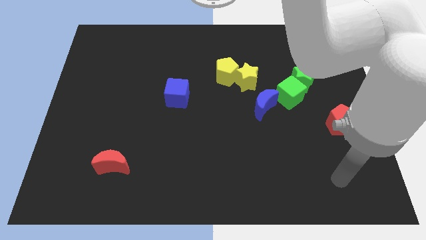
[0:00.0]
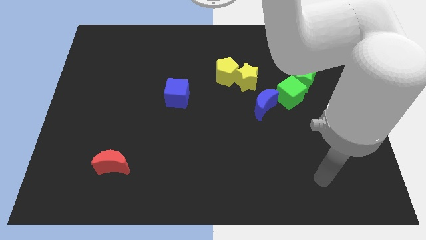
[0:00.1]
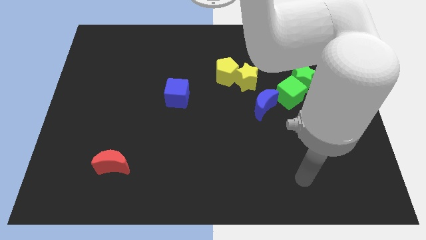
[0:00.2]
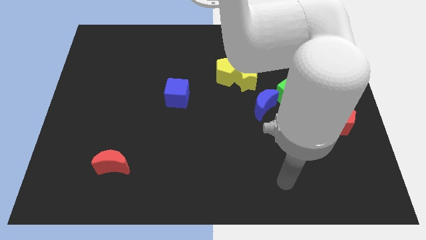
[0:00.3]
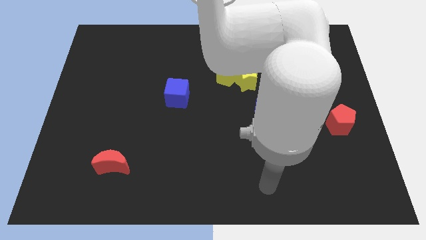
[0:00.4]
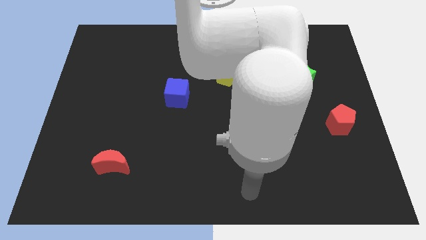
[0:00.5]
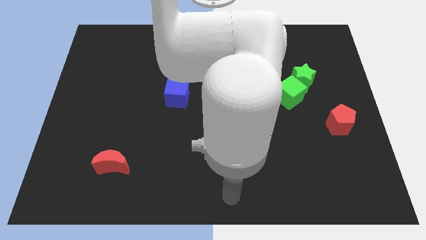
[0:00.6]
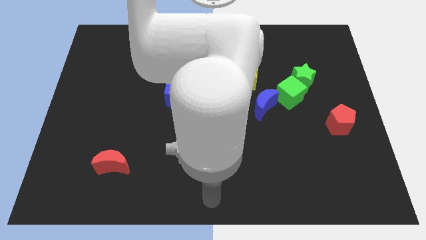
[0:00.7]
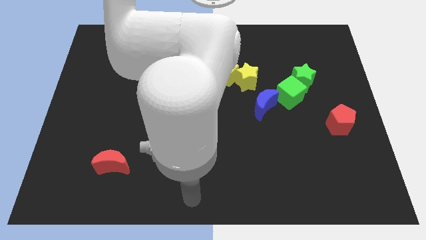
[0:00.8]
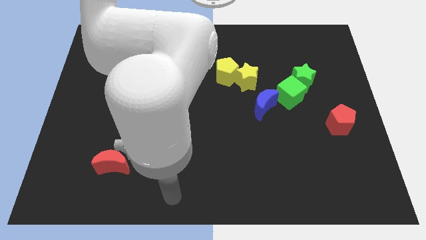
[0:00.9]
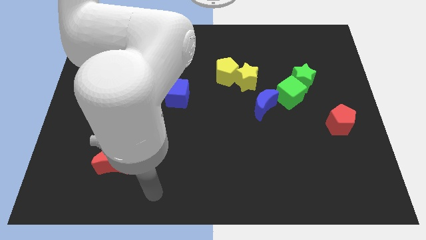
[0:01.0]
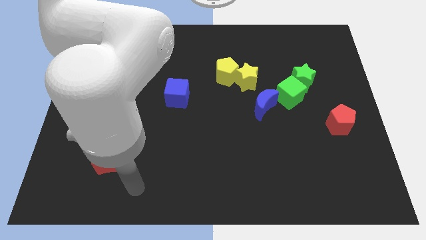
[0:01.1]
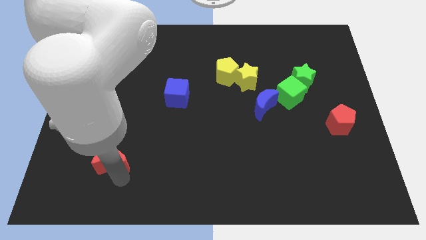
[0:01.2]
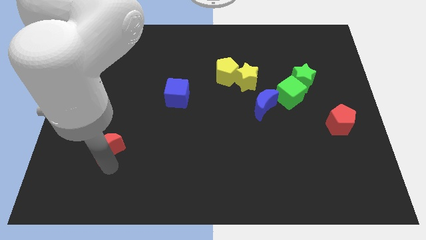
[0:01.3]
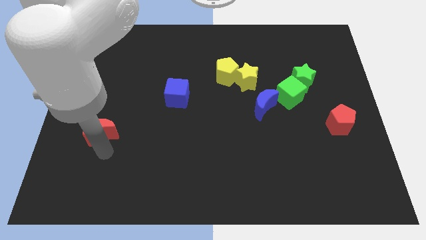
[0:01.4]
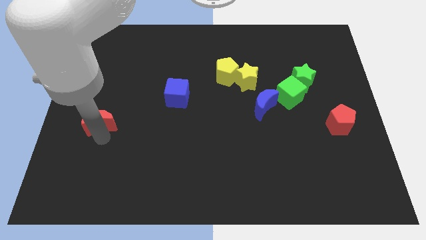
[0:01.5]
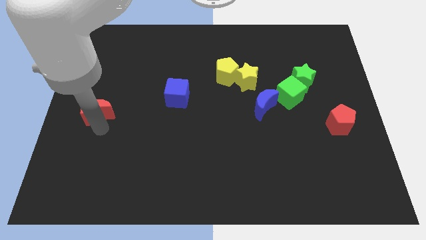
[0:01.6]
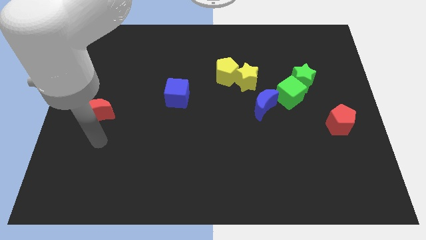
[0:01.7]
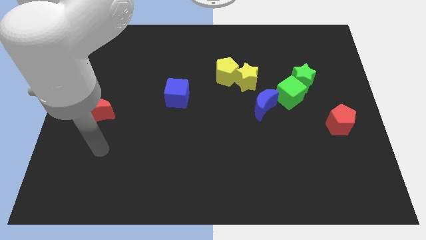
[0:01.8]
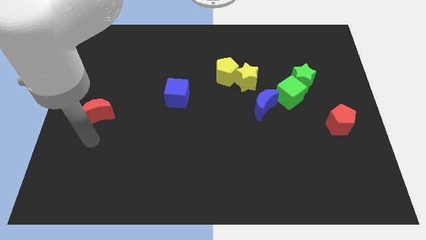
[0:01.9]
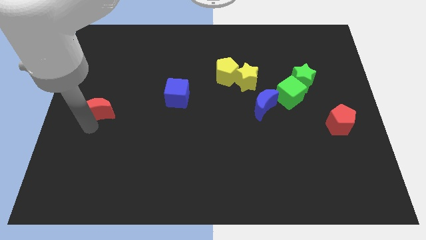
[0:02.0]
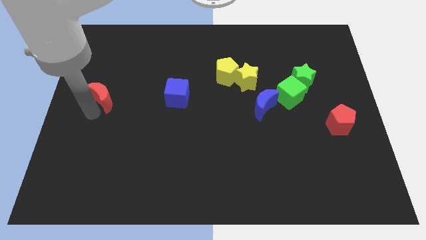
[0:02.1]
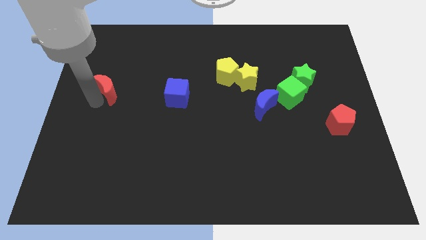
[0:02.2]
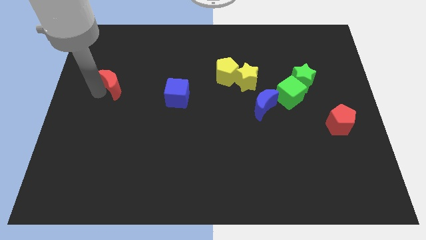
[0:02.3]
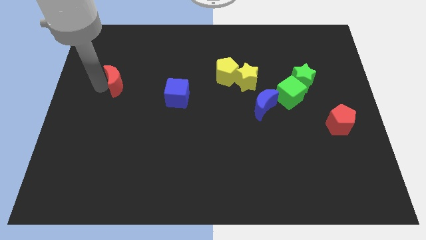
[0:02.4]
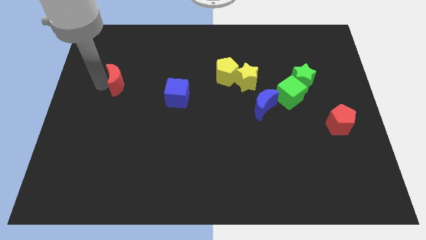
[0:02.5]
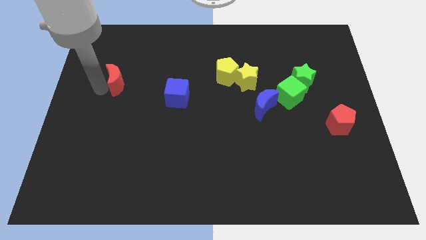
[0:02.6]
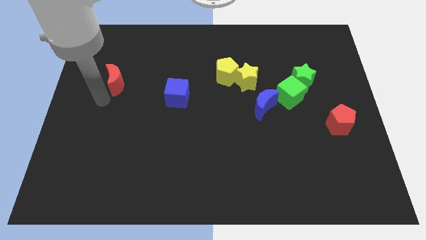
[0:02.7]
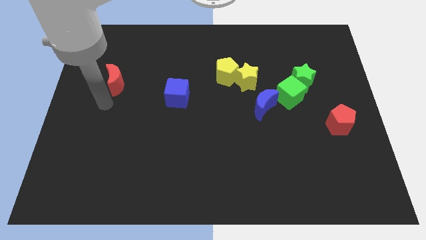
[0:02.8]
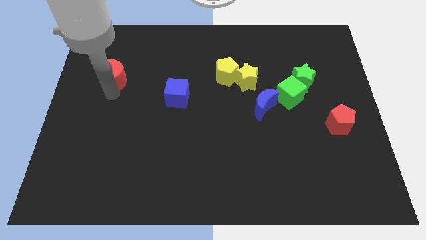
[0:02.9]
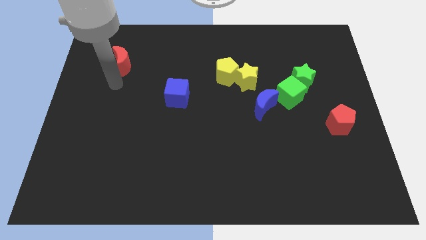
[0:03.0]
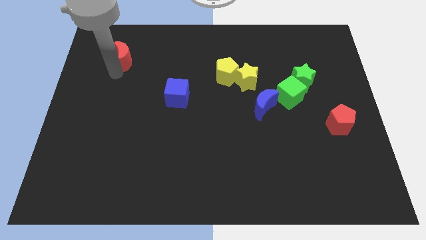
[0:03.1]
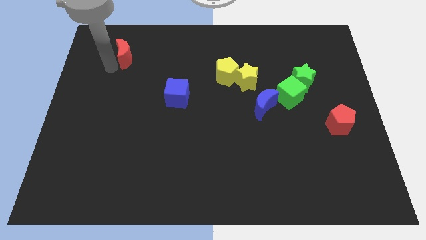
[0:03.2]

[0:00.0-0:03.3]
move the red moon towards top side

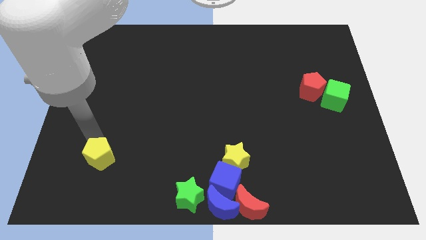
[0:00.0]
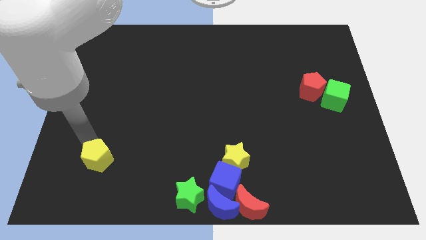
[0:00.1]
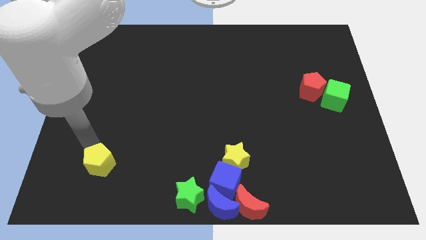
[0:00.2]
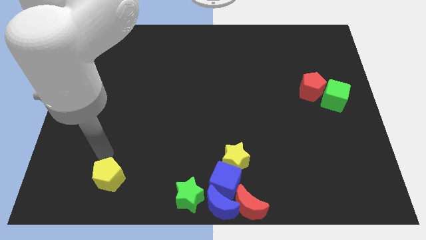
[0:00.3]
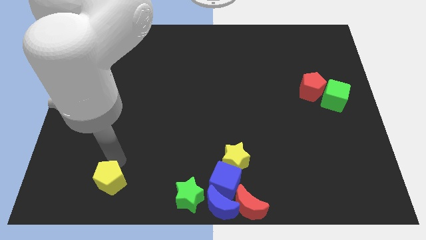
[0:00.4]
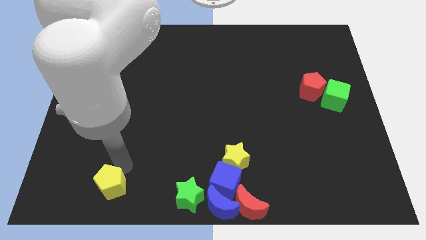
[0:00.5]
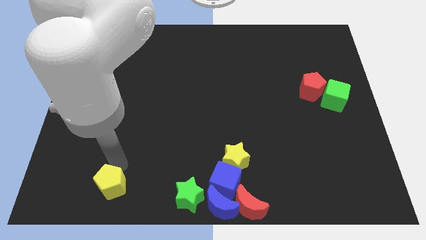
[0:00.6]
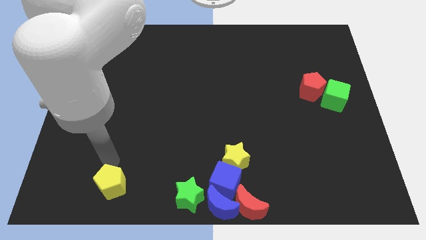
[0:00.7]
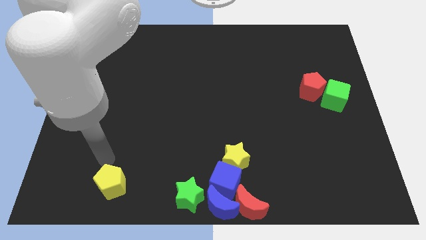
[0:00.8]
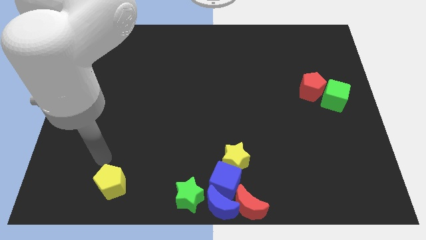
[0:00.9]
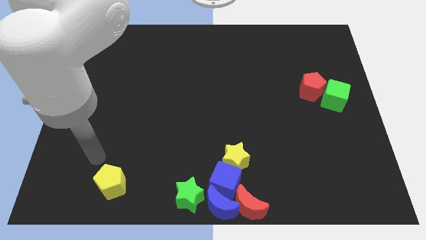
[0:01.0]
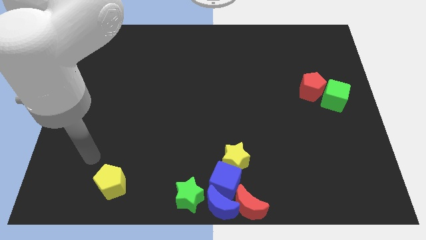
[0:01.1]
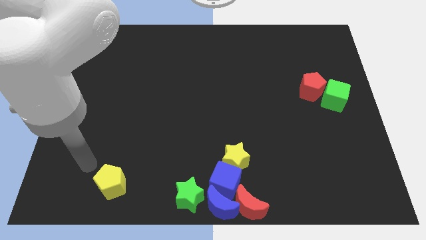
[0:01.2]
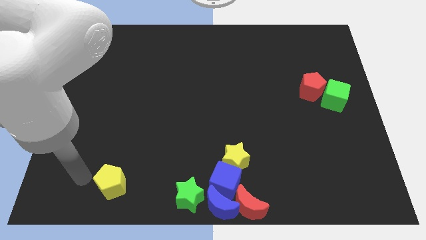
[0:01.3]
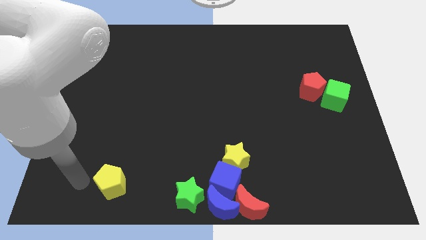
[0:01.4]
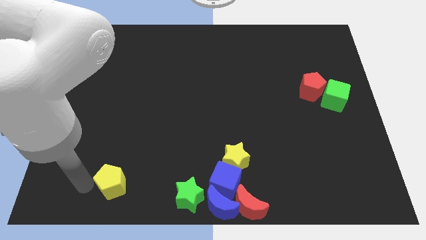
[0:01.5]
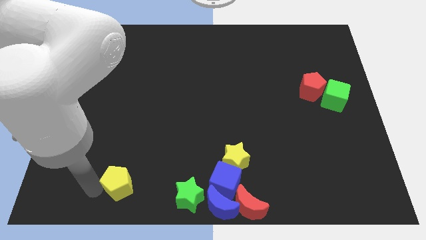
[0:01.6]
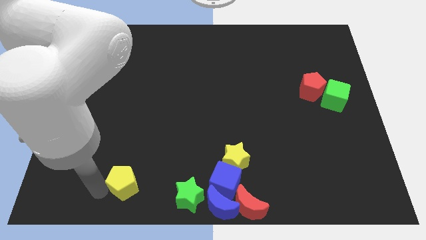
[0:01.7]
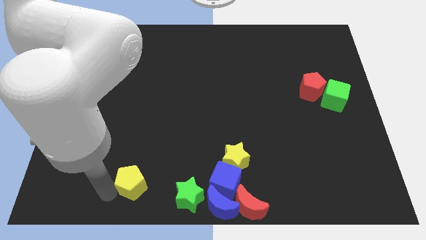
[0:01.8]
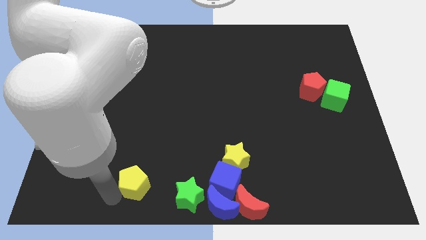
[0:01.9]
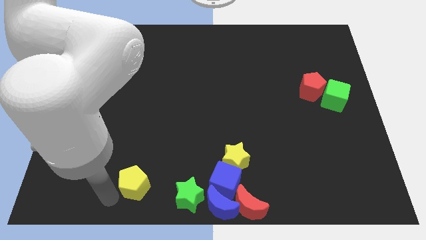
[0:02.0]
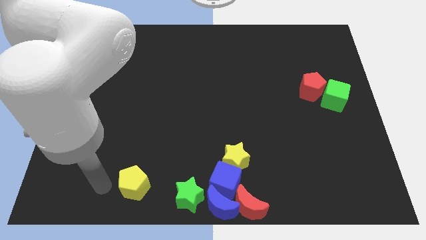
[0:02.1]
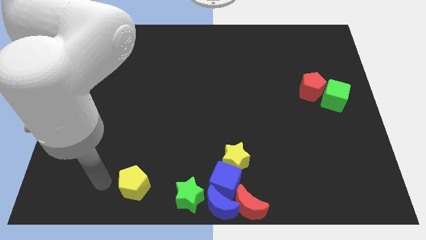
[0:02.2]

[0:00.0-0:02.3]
move the yellow pentagon to the left of green star

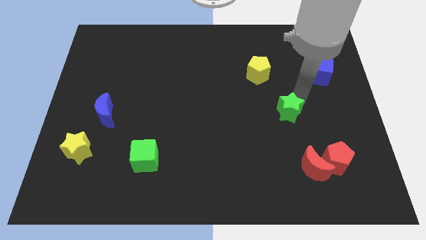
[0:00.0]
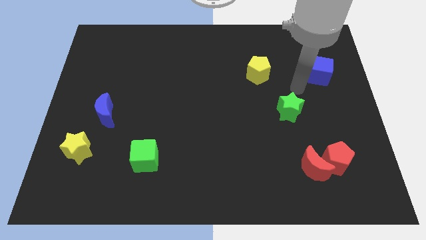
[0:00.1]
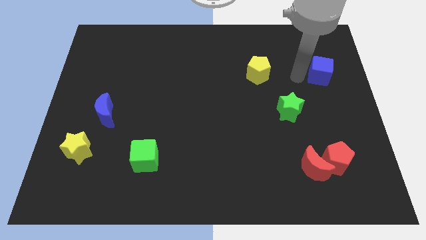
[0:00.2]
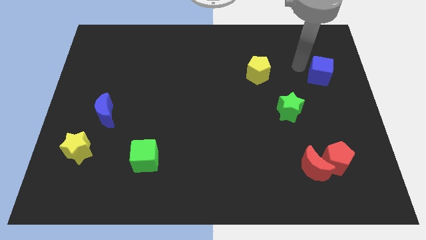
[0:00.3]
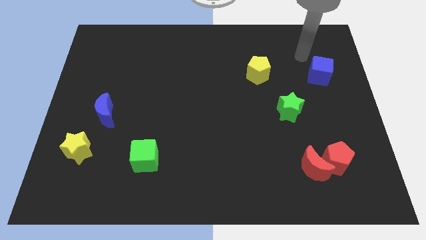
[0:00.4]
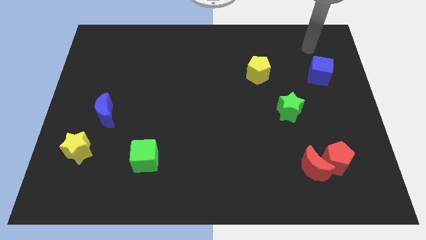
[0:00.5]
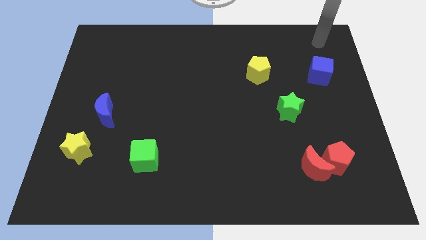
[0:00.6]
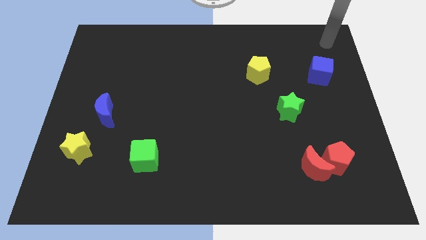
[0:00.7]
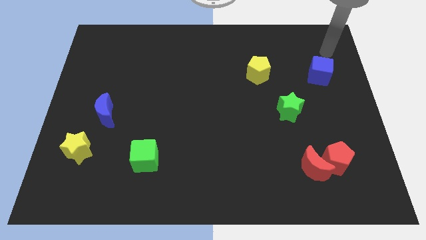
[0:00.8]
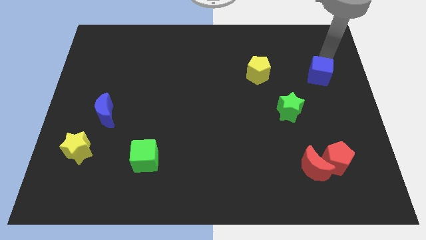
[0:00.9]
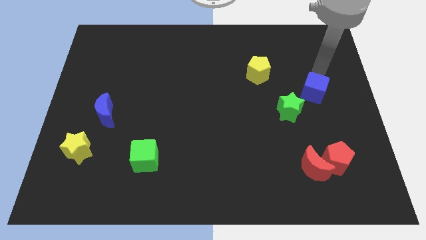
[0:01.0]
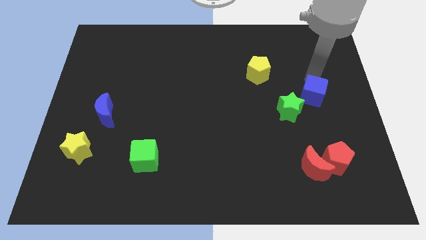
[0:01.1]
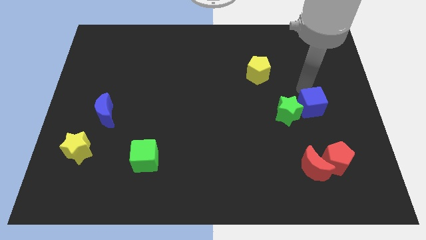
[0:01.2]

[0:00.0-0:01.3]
push the blue cube into green star

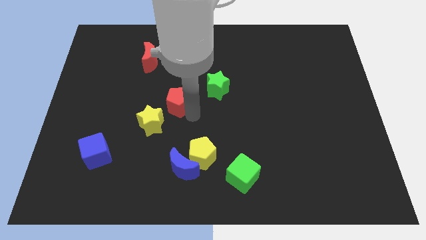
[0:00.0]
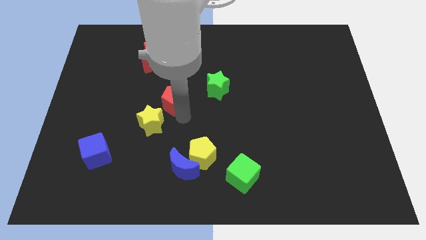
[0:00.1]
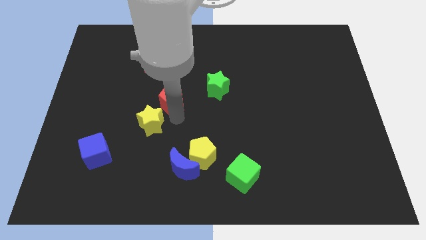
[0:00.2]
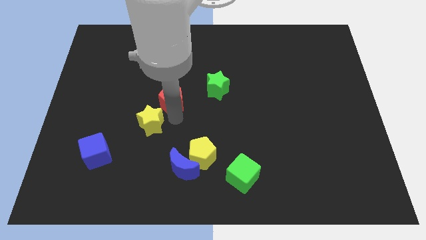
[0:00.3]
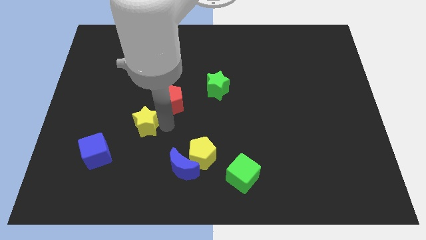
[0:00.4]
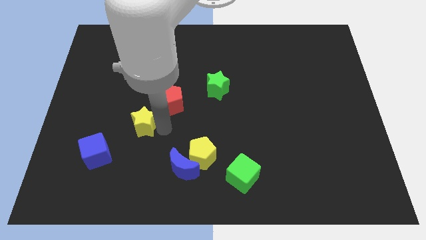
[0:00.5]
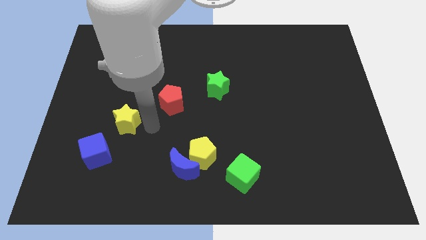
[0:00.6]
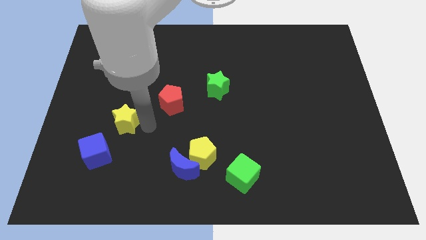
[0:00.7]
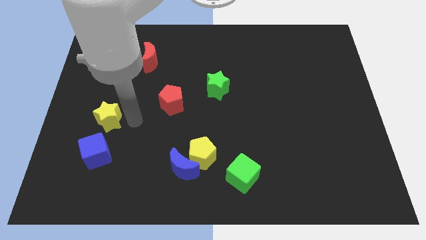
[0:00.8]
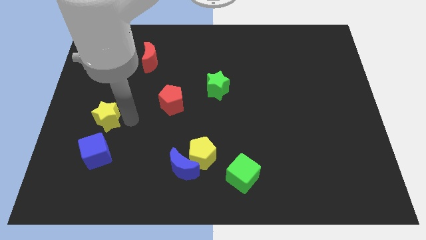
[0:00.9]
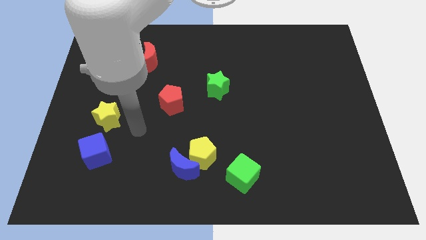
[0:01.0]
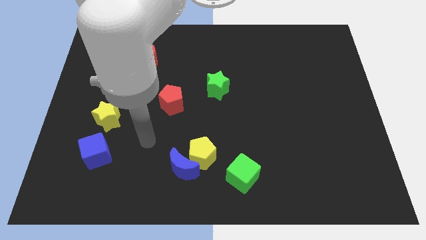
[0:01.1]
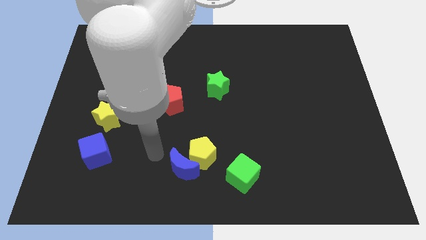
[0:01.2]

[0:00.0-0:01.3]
slide the yellow star to the top side of the blue cube

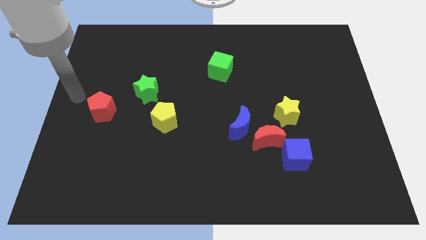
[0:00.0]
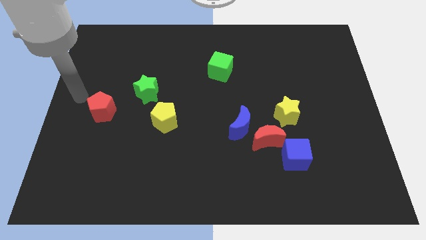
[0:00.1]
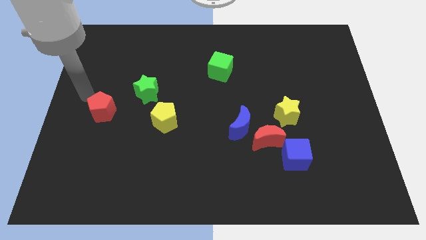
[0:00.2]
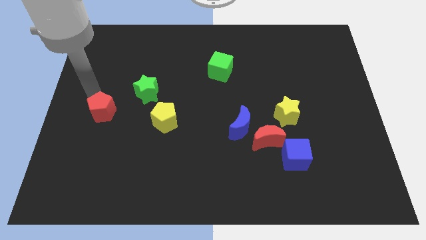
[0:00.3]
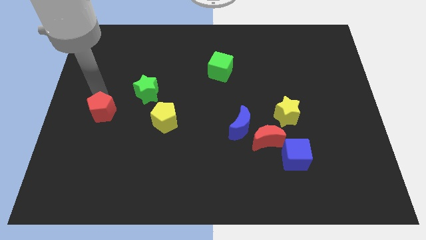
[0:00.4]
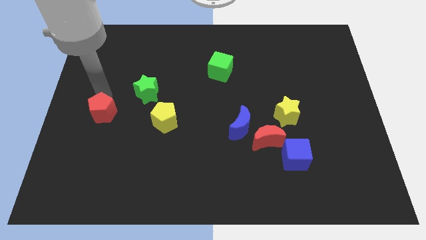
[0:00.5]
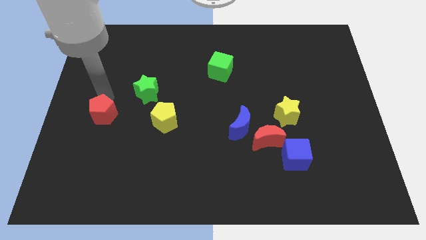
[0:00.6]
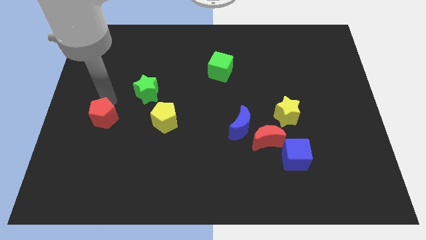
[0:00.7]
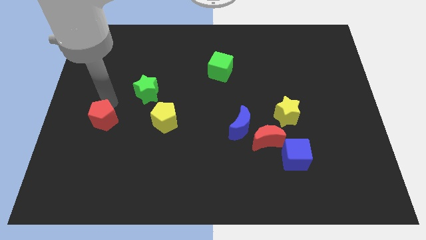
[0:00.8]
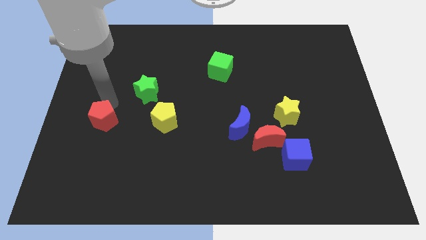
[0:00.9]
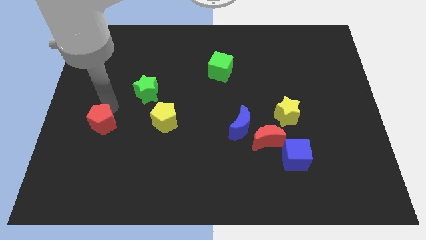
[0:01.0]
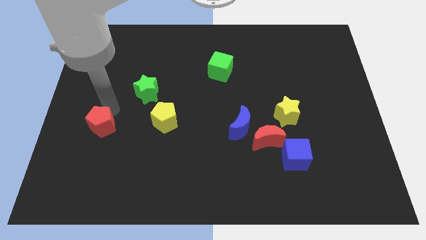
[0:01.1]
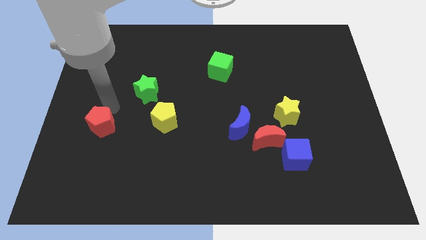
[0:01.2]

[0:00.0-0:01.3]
place the red pentagon parallel to the left corner
